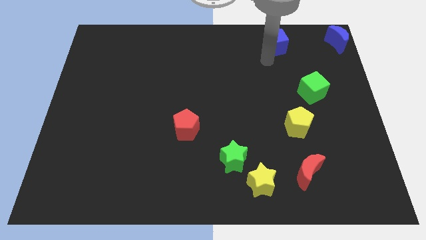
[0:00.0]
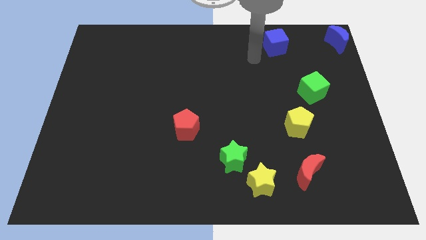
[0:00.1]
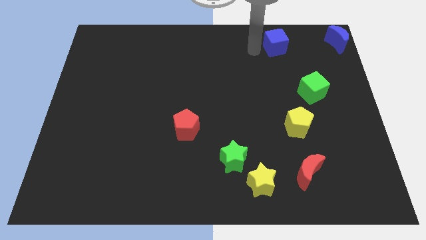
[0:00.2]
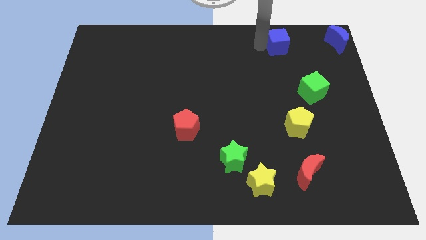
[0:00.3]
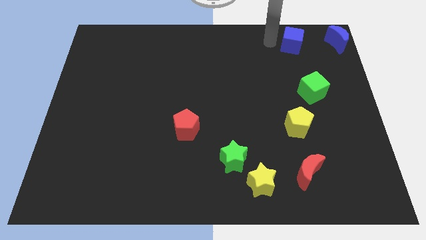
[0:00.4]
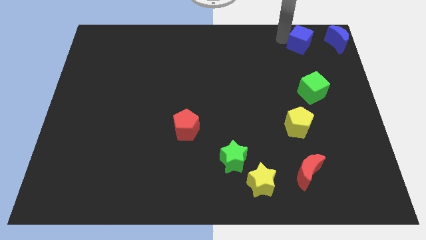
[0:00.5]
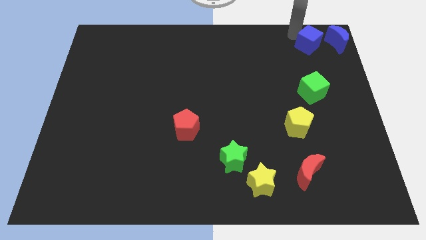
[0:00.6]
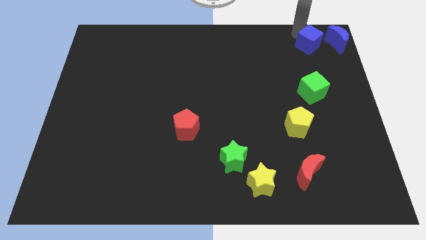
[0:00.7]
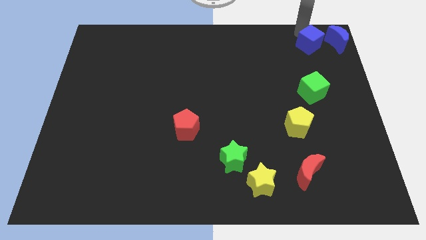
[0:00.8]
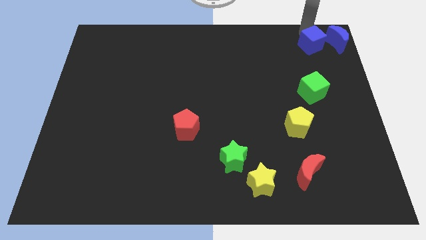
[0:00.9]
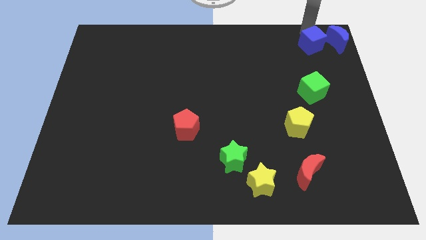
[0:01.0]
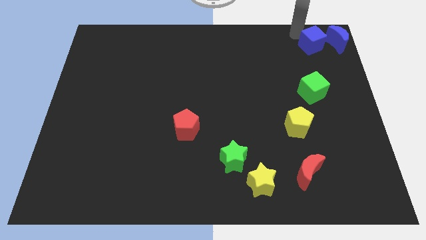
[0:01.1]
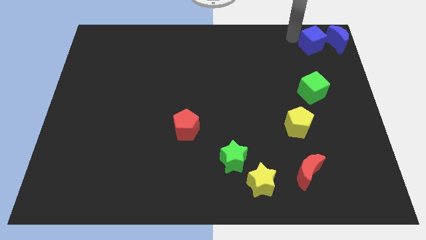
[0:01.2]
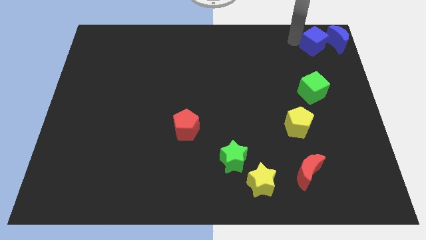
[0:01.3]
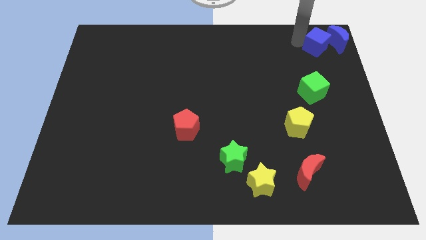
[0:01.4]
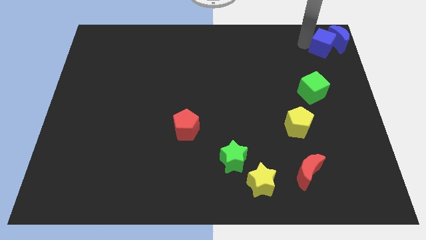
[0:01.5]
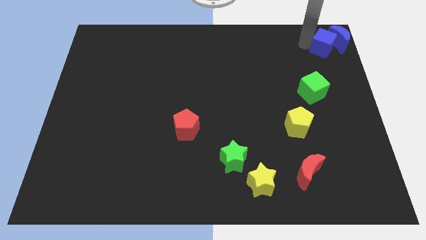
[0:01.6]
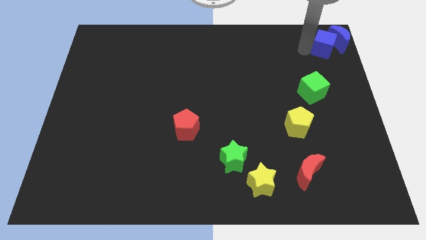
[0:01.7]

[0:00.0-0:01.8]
push the blue cube into the blue moon

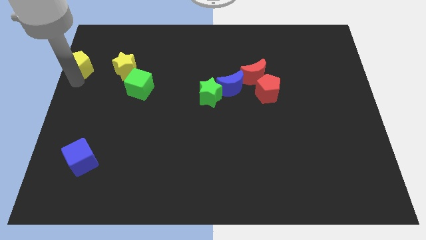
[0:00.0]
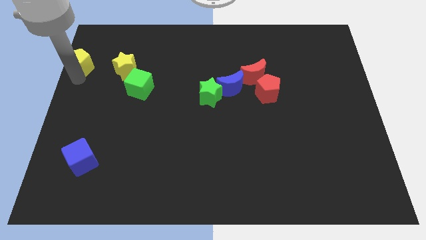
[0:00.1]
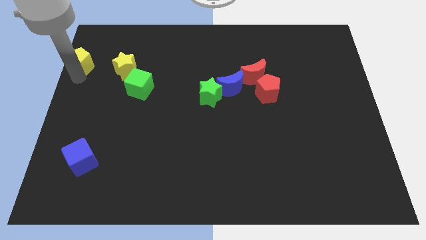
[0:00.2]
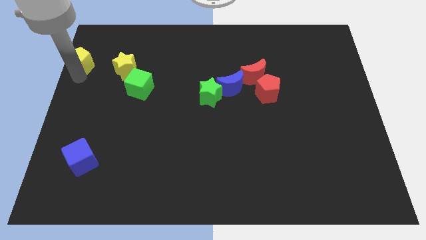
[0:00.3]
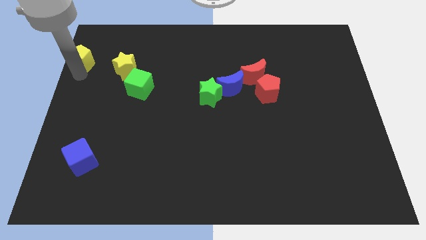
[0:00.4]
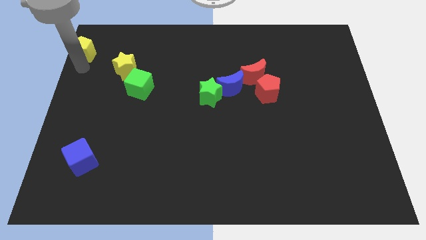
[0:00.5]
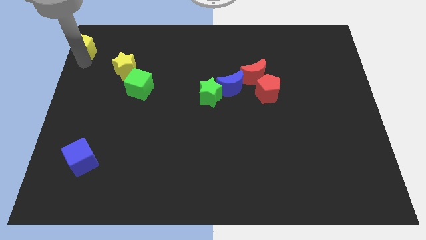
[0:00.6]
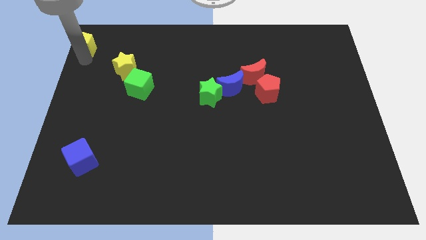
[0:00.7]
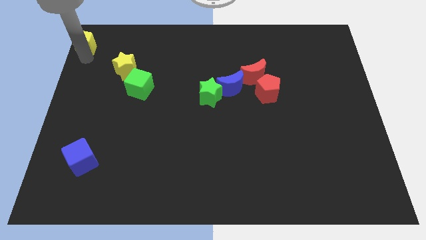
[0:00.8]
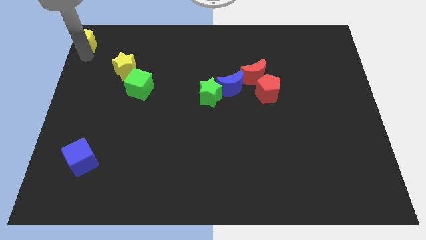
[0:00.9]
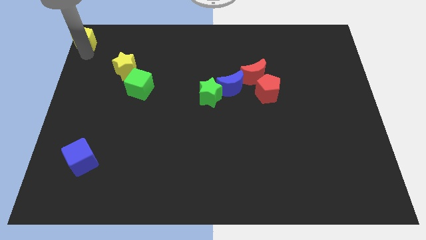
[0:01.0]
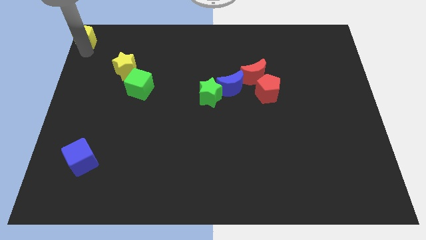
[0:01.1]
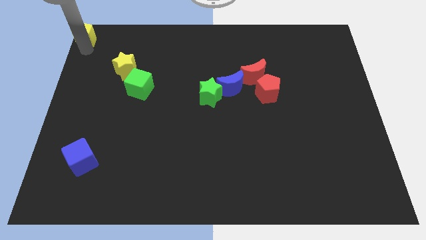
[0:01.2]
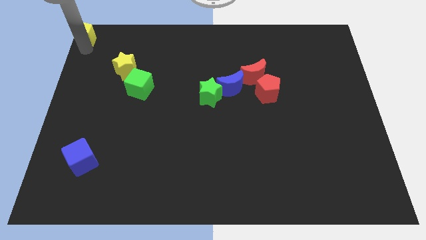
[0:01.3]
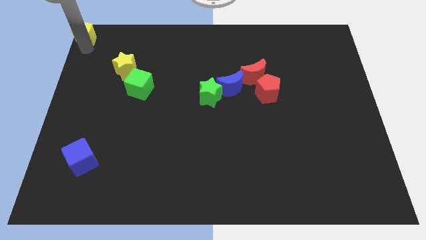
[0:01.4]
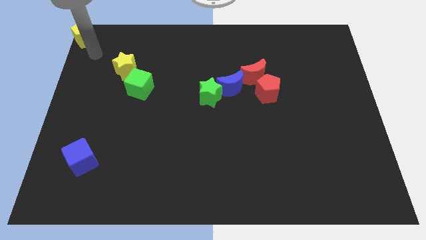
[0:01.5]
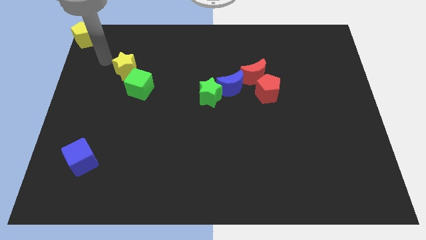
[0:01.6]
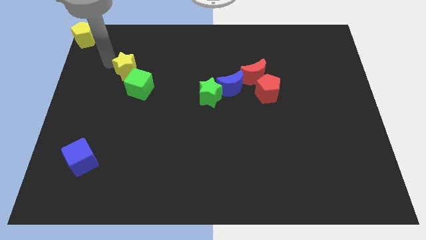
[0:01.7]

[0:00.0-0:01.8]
move yellow pentagon to the top left corner

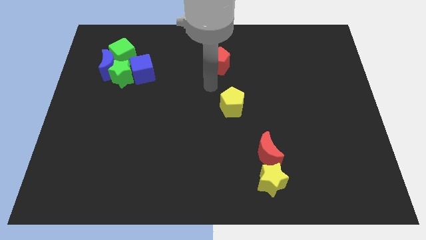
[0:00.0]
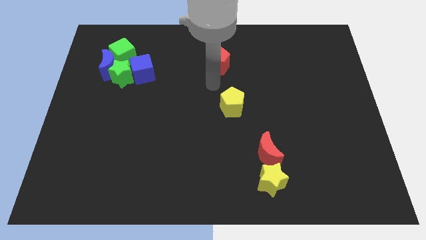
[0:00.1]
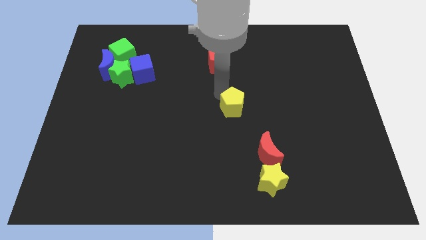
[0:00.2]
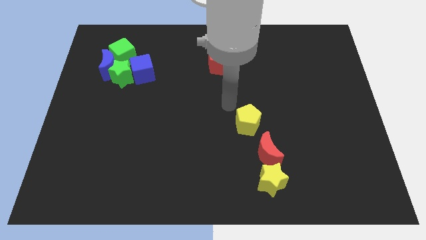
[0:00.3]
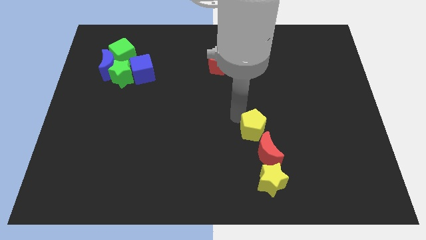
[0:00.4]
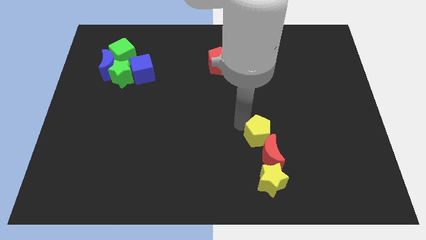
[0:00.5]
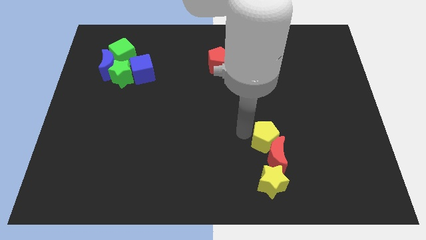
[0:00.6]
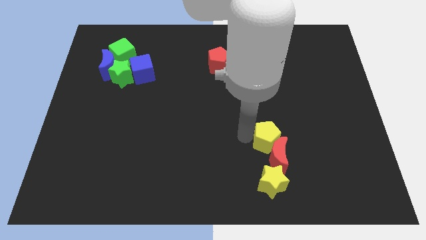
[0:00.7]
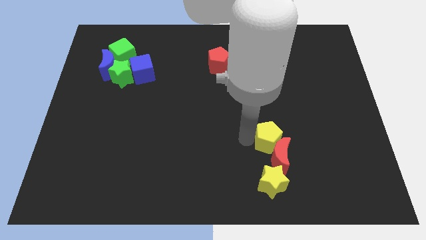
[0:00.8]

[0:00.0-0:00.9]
push yellow pentagon towards red crescent

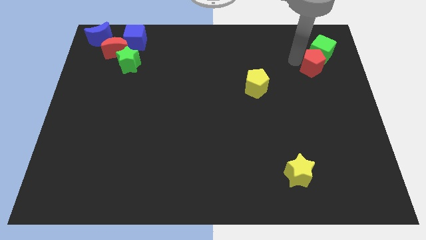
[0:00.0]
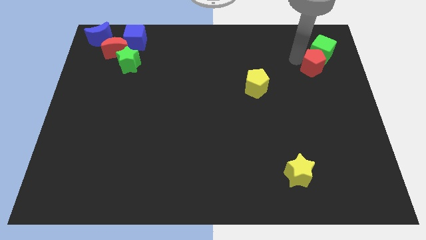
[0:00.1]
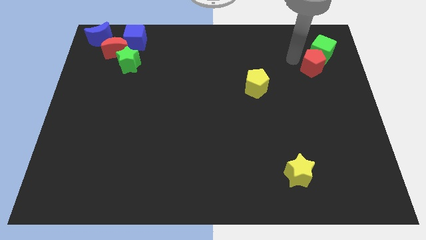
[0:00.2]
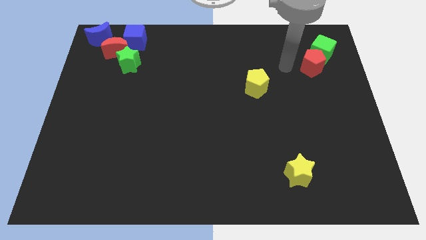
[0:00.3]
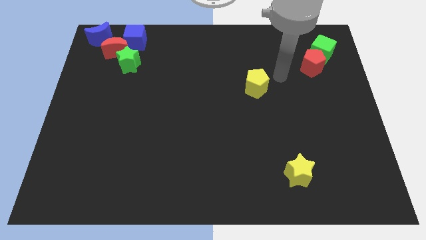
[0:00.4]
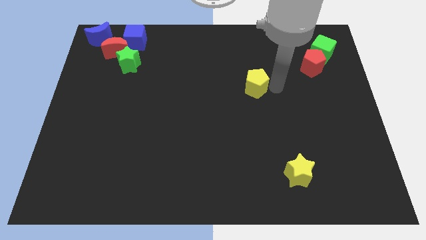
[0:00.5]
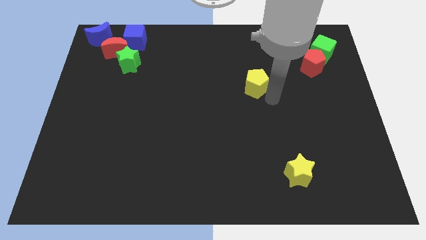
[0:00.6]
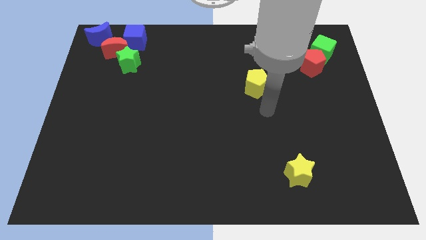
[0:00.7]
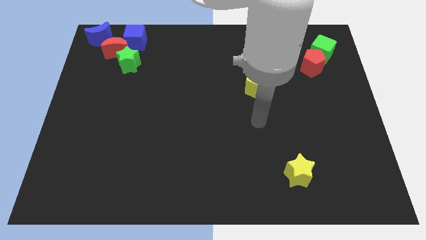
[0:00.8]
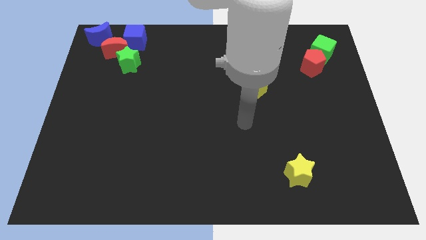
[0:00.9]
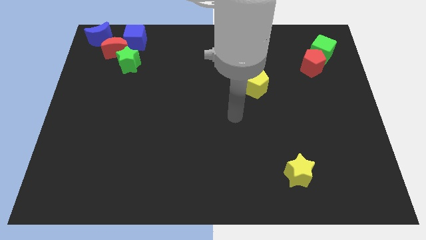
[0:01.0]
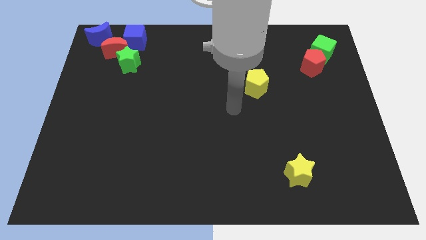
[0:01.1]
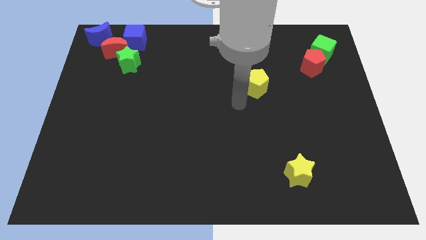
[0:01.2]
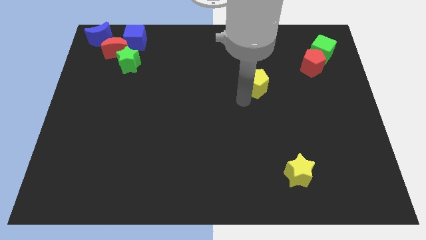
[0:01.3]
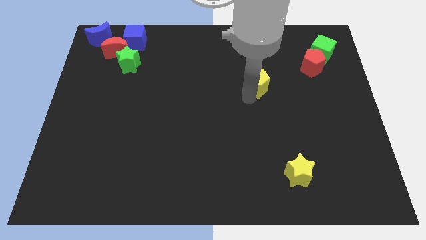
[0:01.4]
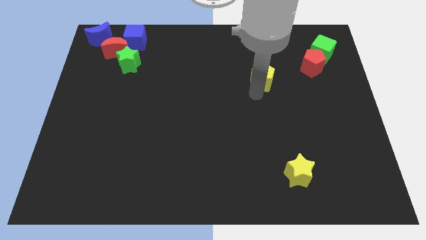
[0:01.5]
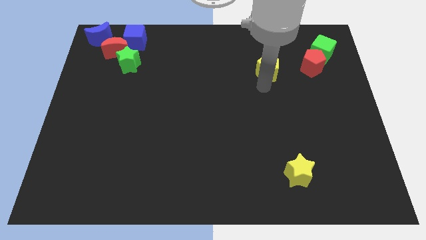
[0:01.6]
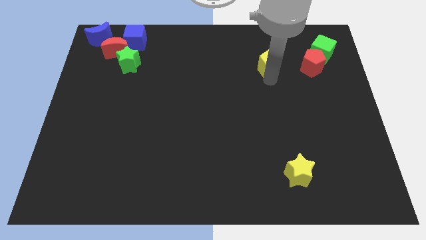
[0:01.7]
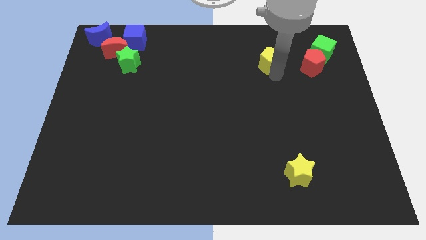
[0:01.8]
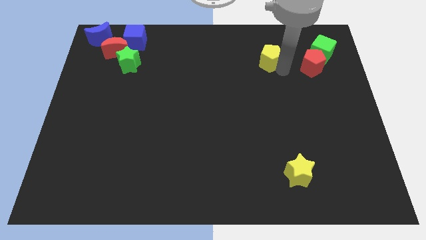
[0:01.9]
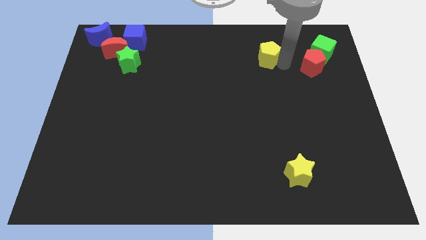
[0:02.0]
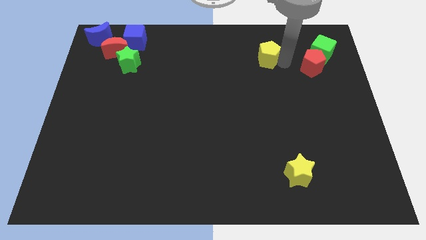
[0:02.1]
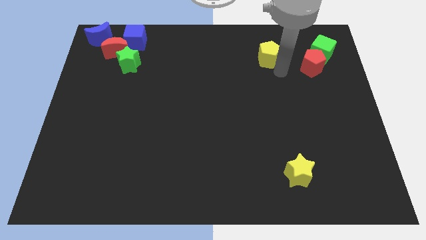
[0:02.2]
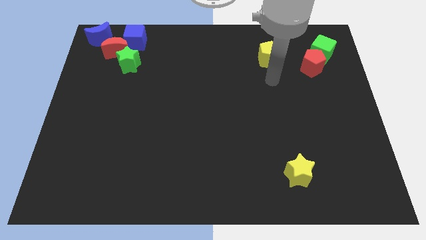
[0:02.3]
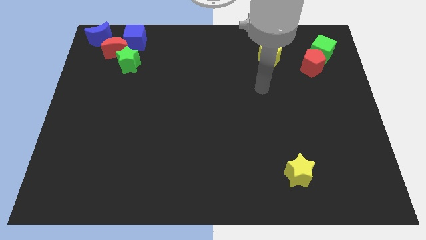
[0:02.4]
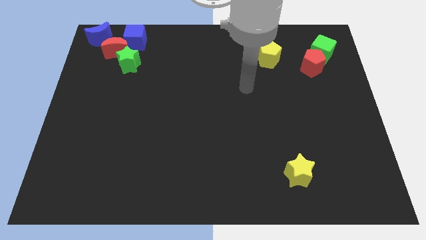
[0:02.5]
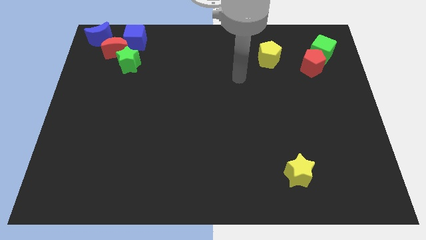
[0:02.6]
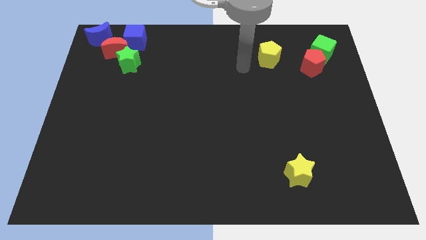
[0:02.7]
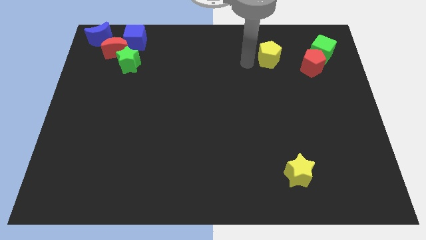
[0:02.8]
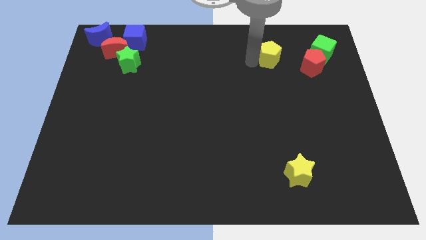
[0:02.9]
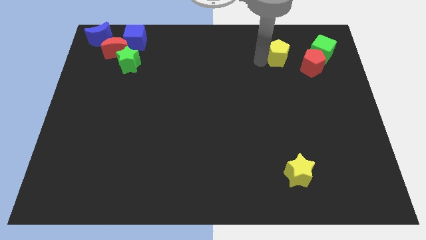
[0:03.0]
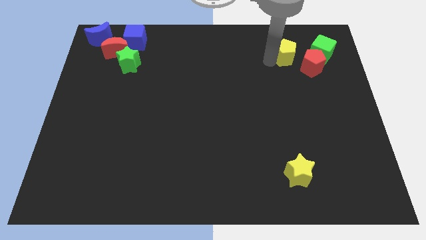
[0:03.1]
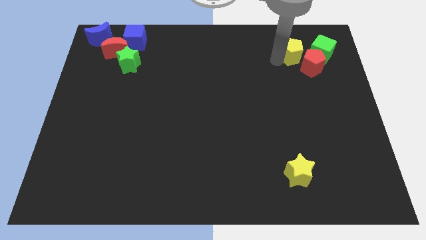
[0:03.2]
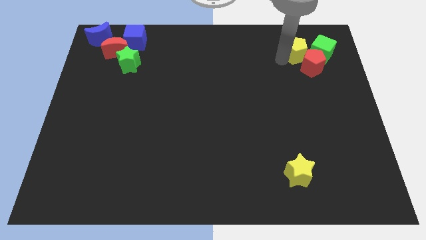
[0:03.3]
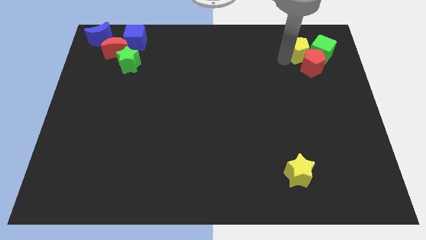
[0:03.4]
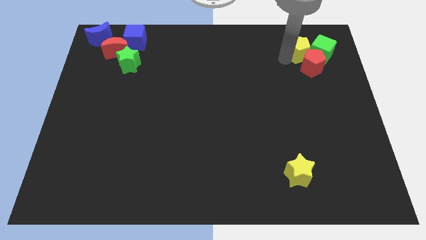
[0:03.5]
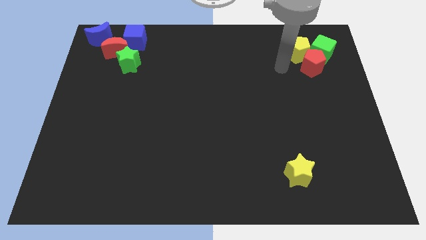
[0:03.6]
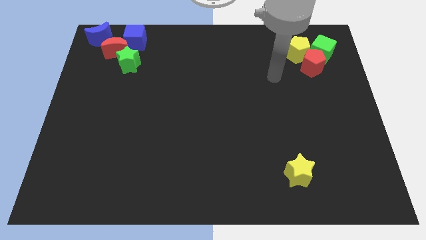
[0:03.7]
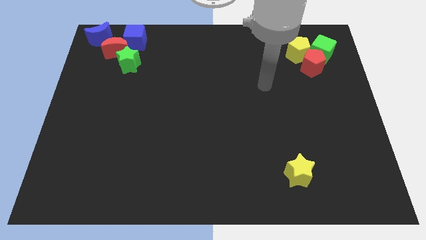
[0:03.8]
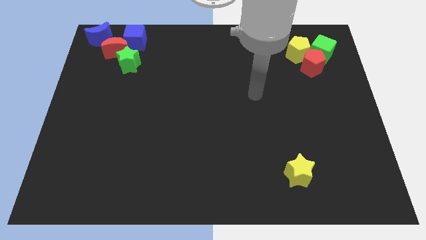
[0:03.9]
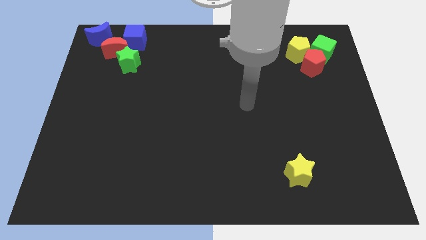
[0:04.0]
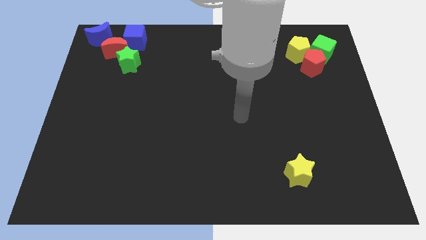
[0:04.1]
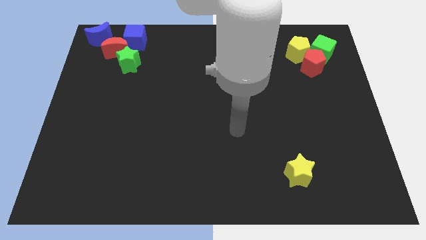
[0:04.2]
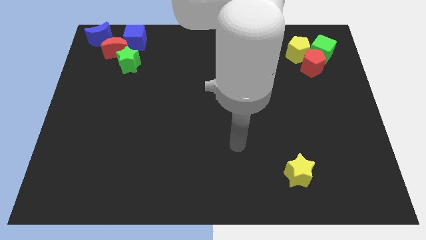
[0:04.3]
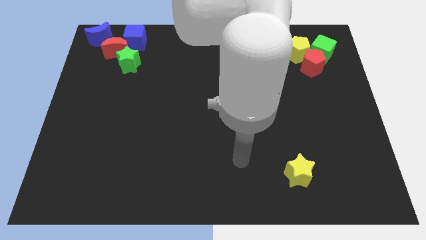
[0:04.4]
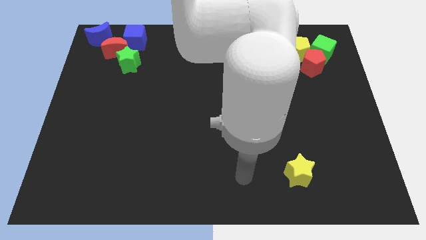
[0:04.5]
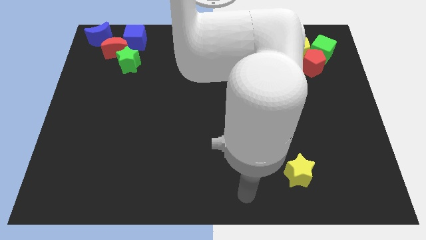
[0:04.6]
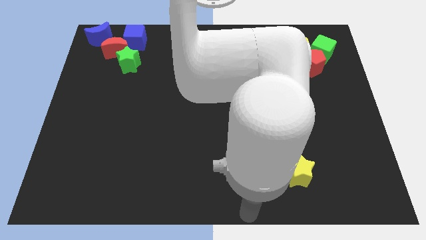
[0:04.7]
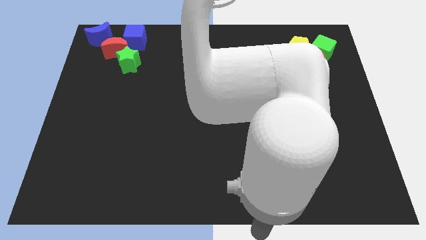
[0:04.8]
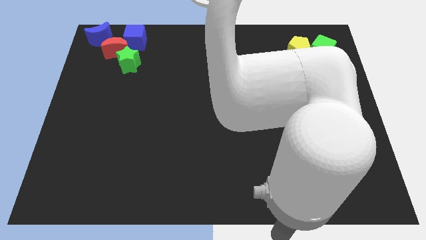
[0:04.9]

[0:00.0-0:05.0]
move the yellow pentagon left beside the green cube and red pentagon
